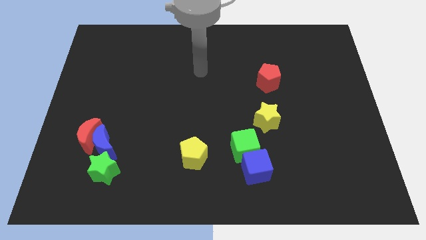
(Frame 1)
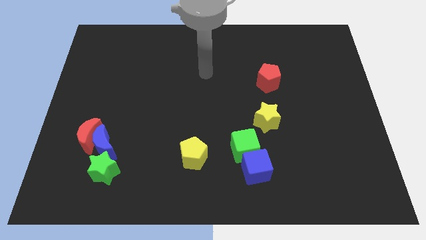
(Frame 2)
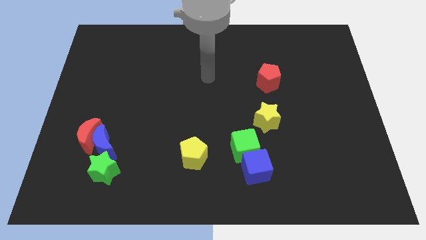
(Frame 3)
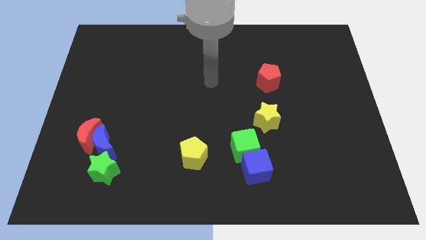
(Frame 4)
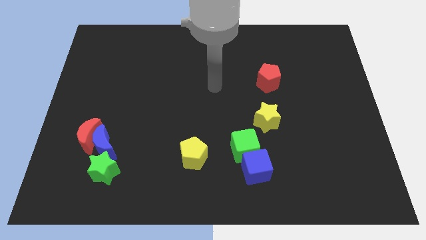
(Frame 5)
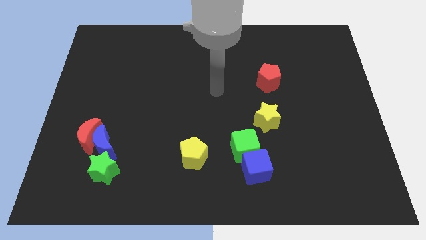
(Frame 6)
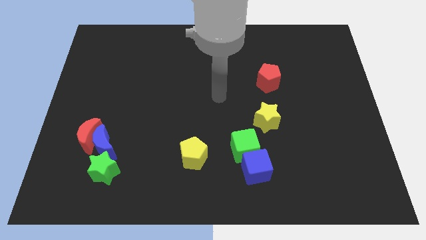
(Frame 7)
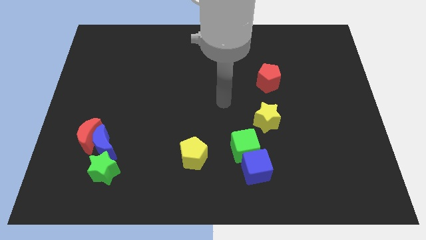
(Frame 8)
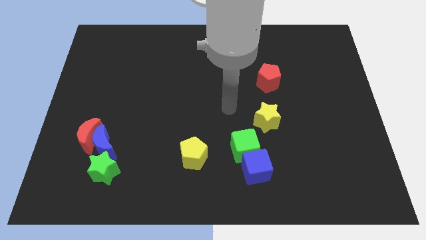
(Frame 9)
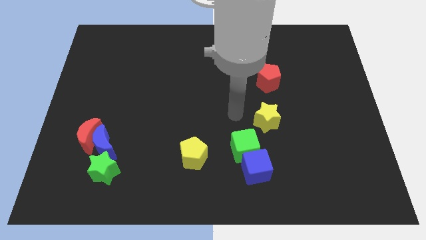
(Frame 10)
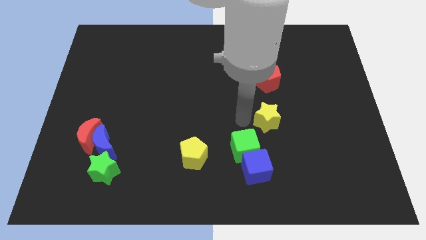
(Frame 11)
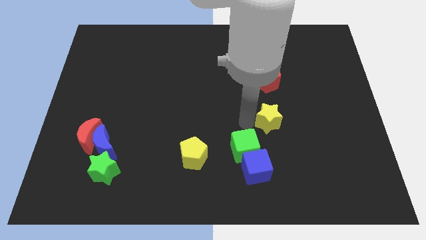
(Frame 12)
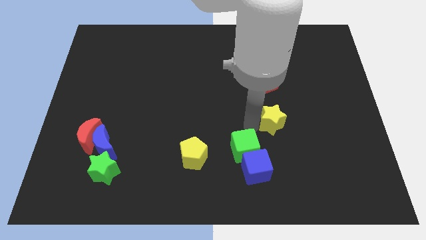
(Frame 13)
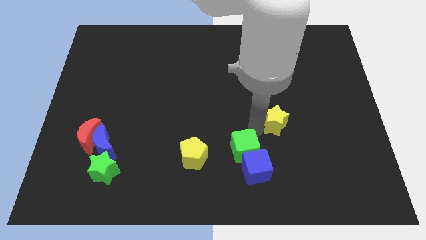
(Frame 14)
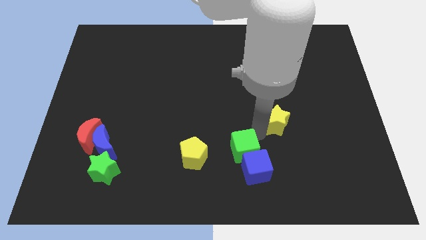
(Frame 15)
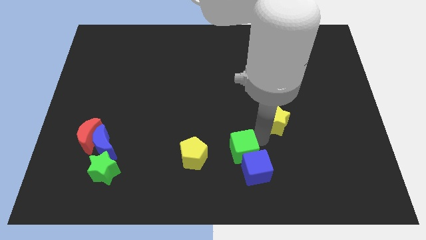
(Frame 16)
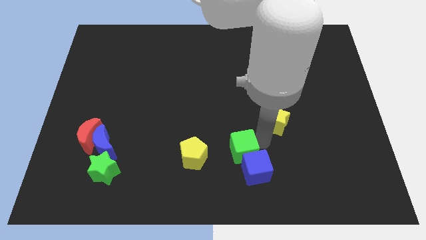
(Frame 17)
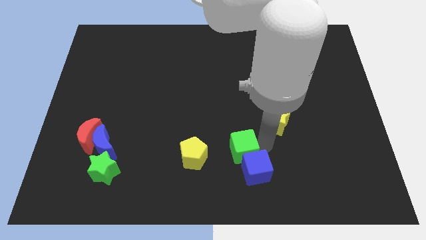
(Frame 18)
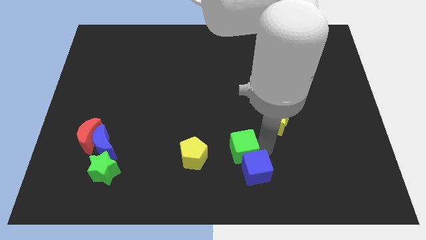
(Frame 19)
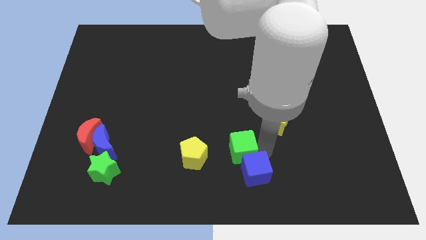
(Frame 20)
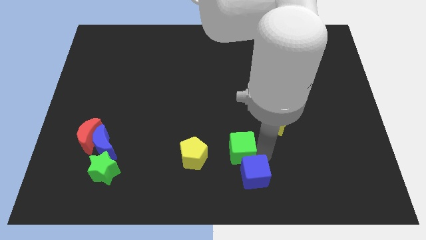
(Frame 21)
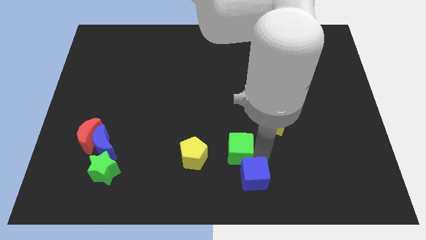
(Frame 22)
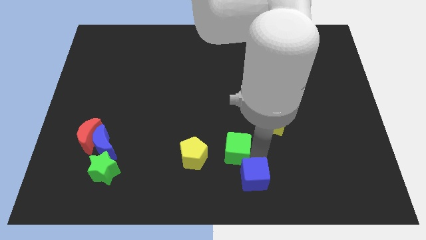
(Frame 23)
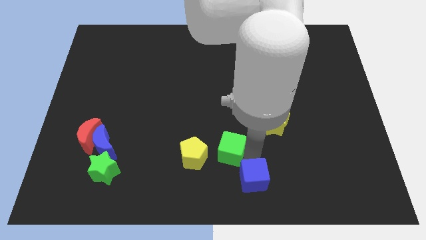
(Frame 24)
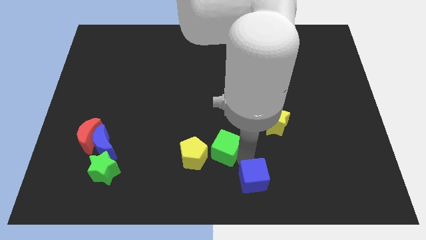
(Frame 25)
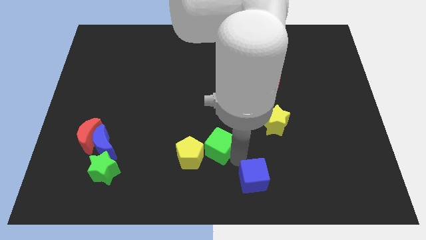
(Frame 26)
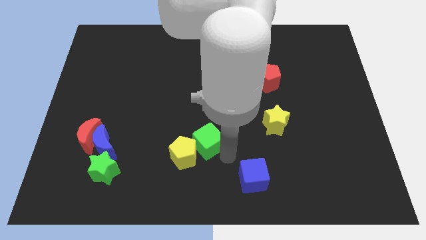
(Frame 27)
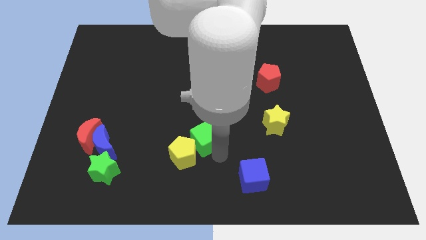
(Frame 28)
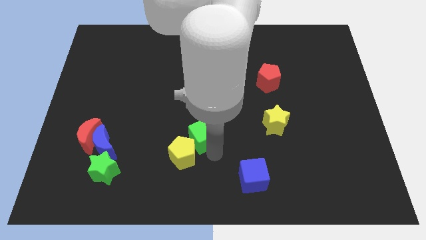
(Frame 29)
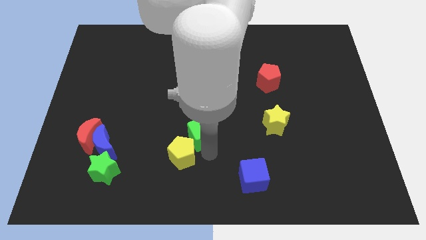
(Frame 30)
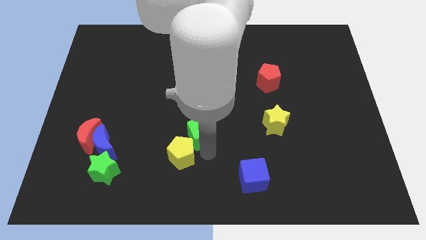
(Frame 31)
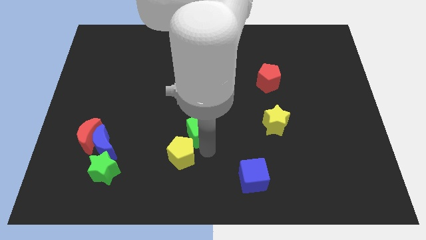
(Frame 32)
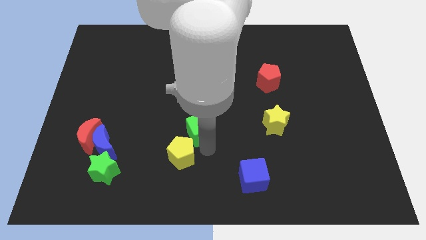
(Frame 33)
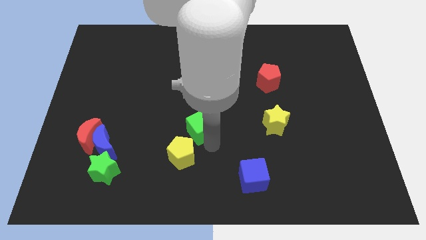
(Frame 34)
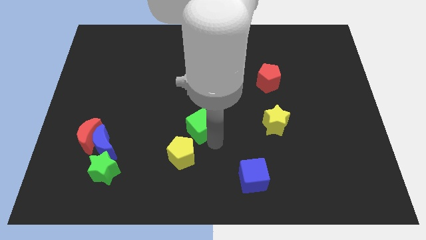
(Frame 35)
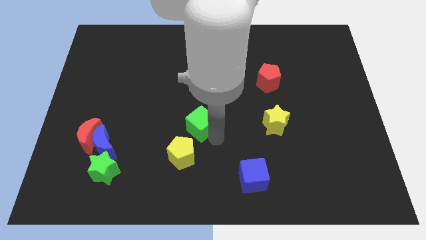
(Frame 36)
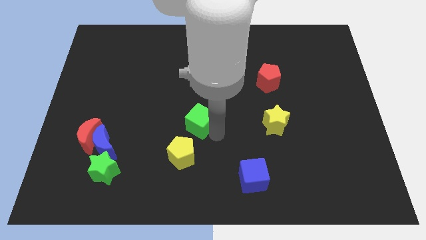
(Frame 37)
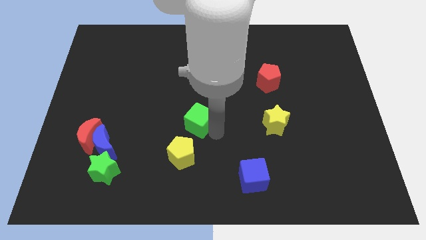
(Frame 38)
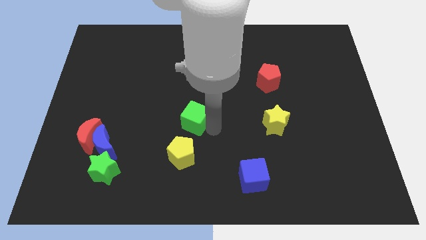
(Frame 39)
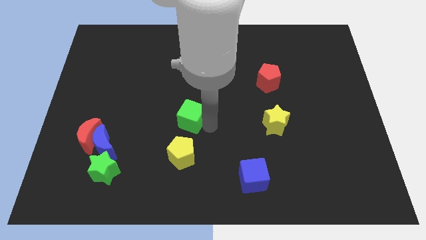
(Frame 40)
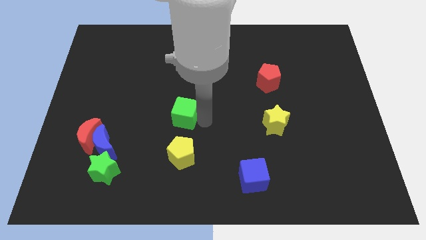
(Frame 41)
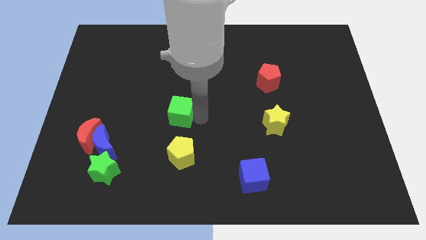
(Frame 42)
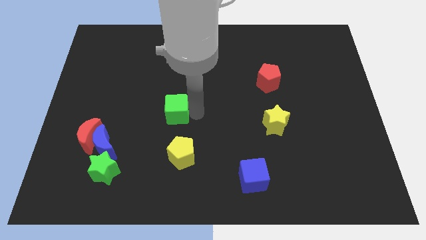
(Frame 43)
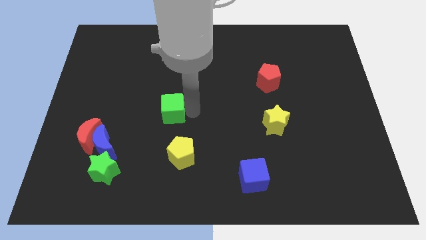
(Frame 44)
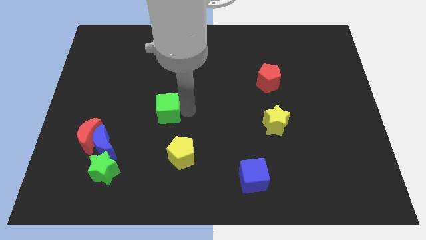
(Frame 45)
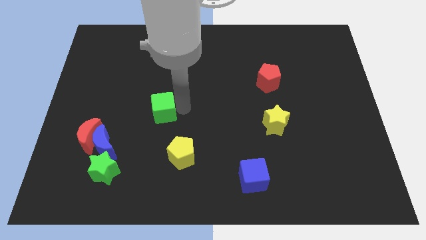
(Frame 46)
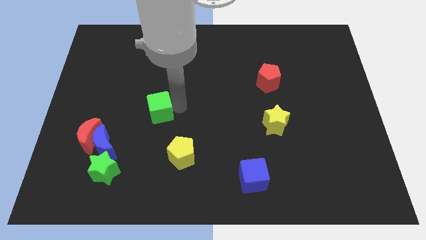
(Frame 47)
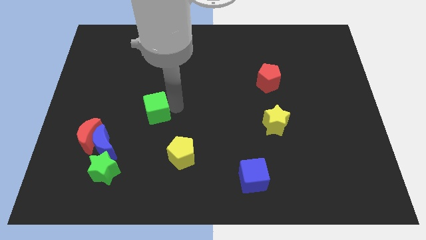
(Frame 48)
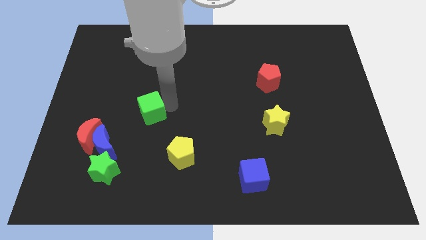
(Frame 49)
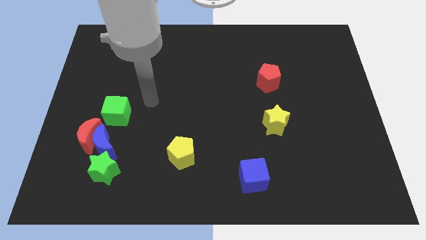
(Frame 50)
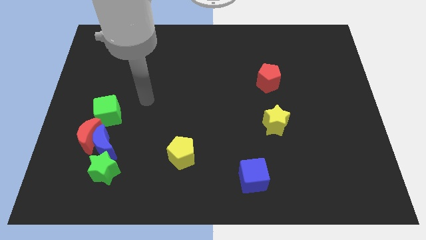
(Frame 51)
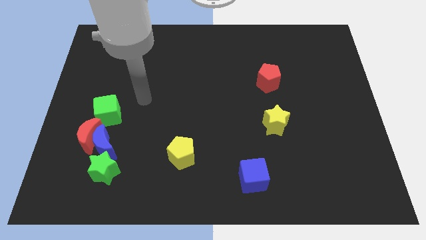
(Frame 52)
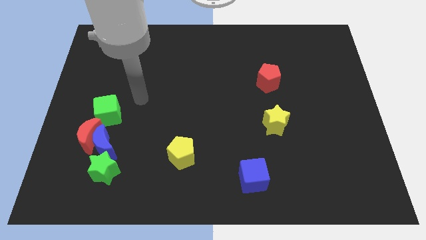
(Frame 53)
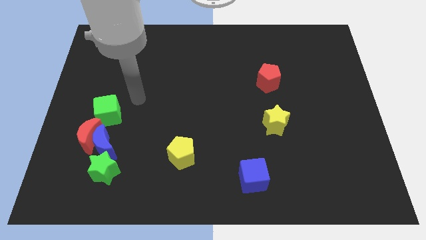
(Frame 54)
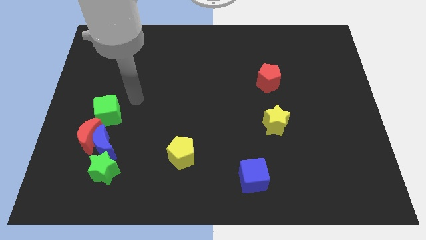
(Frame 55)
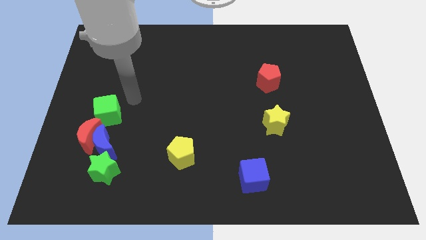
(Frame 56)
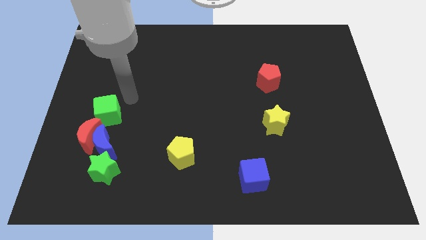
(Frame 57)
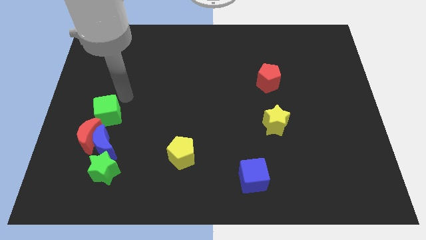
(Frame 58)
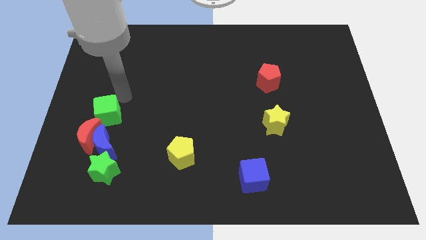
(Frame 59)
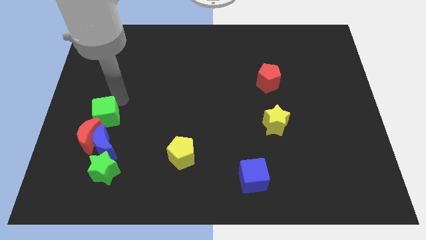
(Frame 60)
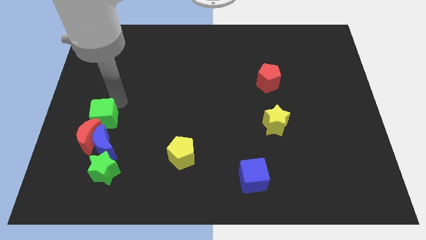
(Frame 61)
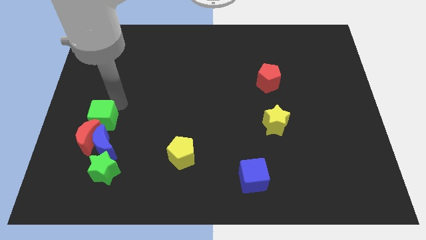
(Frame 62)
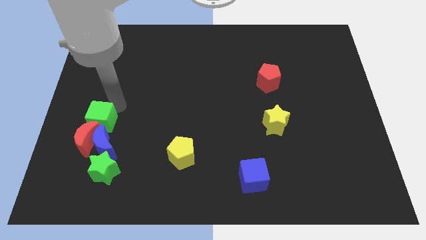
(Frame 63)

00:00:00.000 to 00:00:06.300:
move the green cube close to the red moon

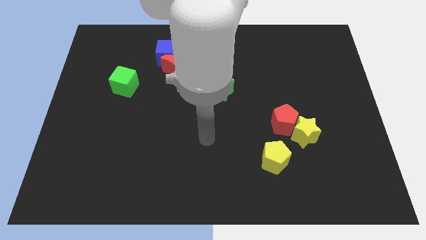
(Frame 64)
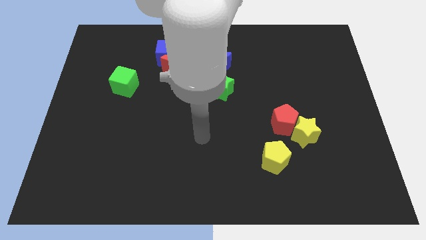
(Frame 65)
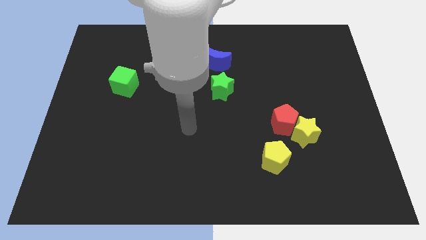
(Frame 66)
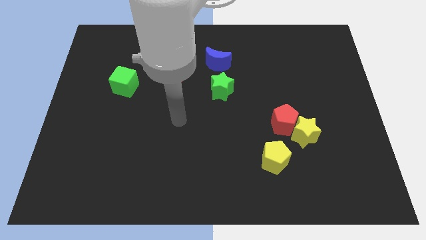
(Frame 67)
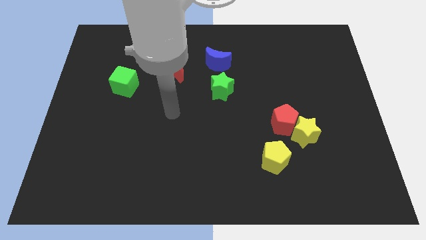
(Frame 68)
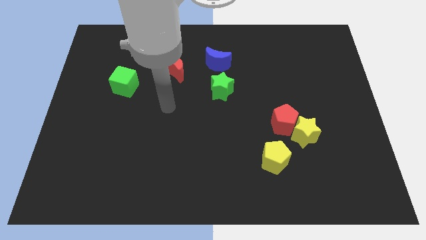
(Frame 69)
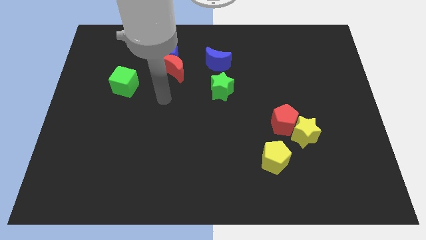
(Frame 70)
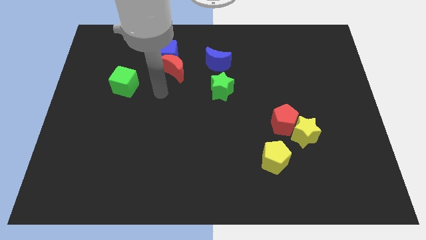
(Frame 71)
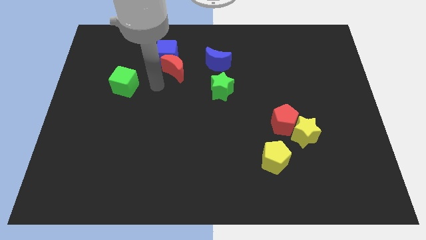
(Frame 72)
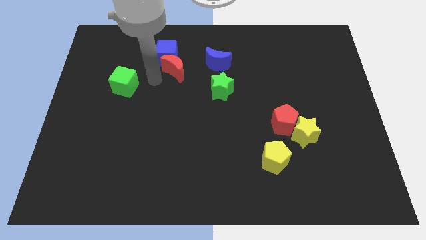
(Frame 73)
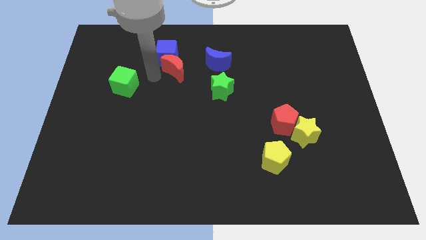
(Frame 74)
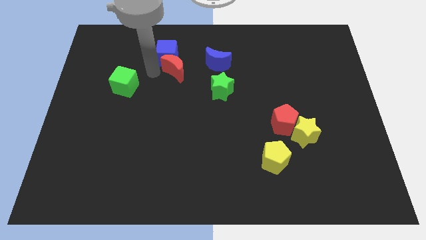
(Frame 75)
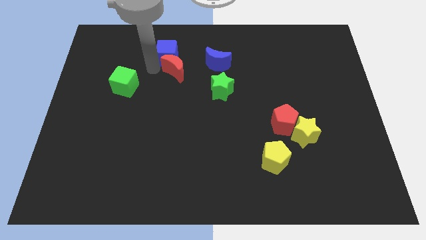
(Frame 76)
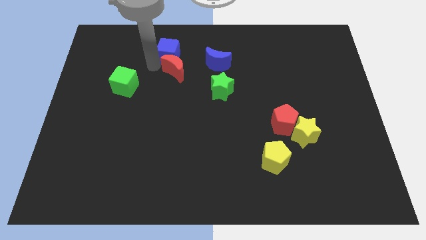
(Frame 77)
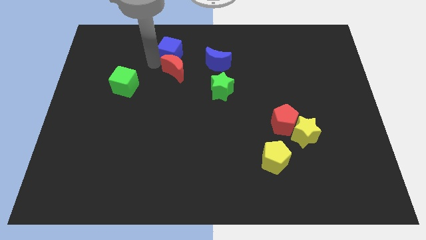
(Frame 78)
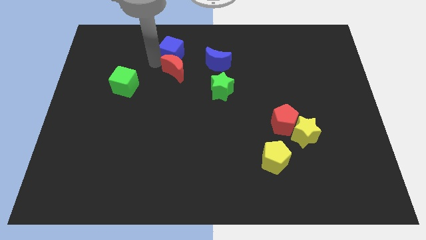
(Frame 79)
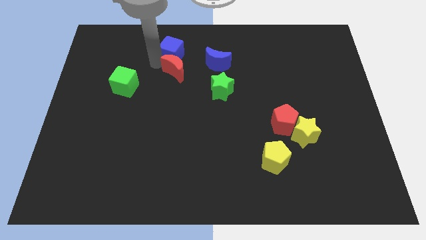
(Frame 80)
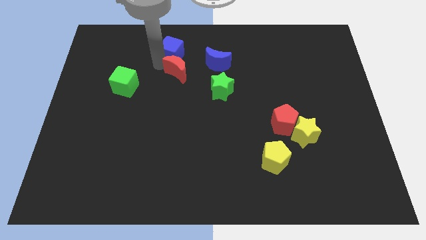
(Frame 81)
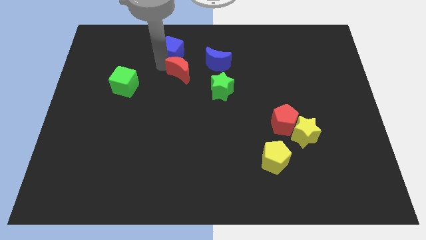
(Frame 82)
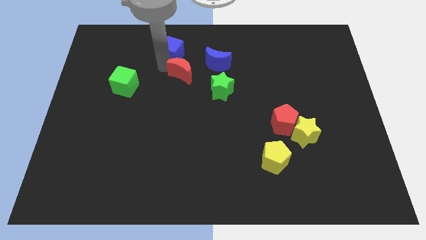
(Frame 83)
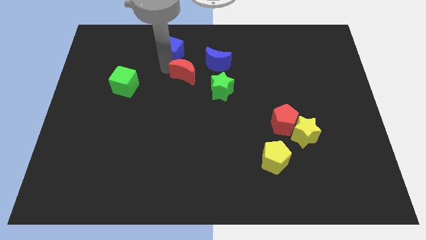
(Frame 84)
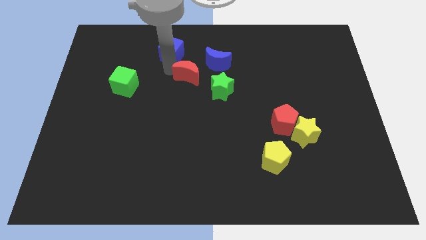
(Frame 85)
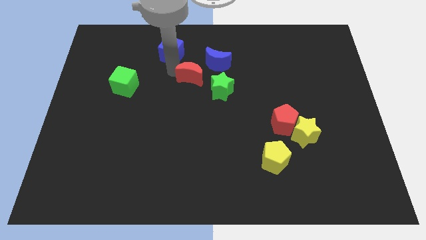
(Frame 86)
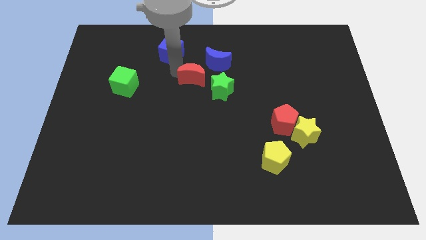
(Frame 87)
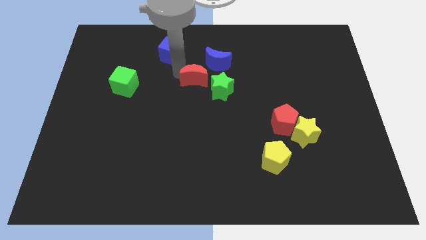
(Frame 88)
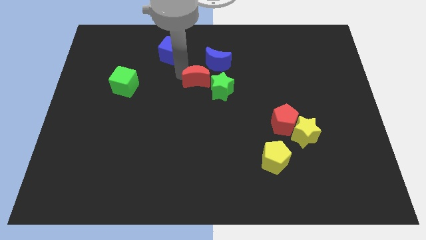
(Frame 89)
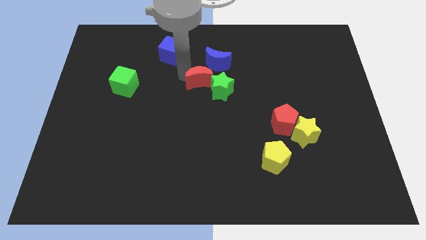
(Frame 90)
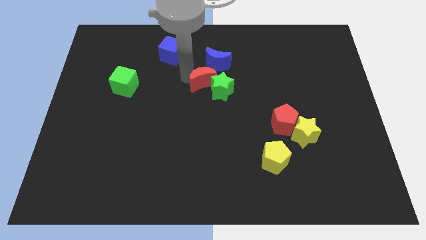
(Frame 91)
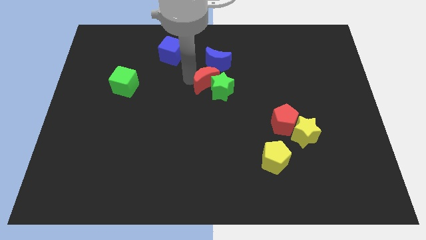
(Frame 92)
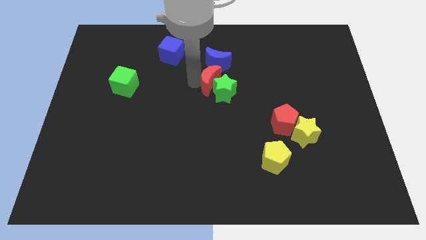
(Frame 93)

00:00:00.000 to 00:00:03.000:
put the red moon towards the green star
